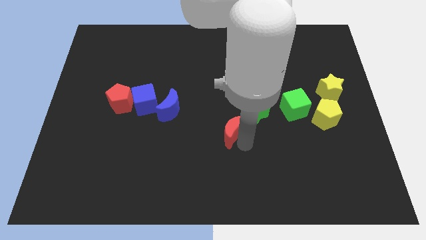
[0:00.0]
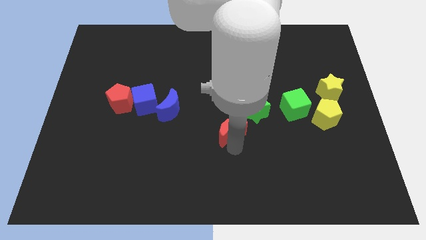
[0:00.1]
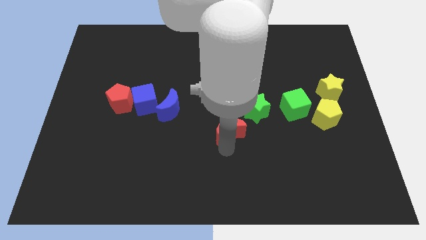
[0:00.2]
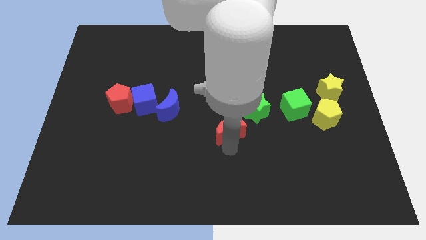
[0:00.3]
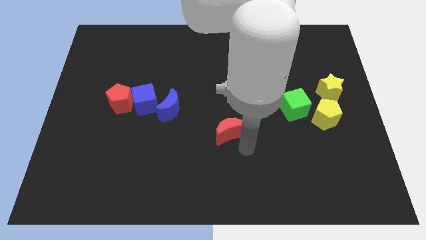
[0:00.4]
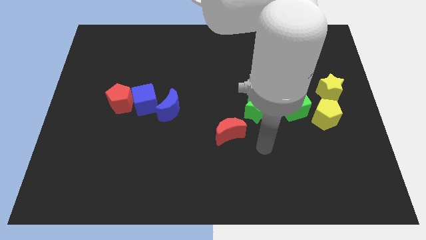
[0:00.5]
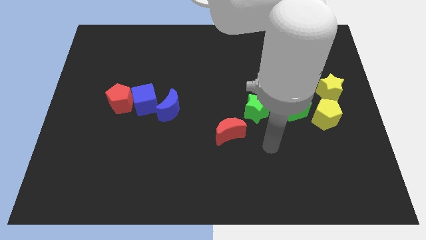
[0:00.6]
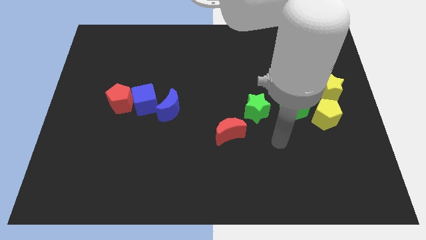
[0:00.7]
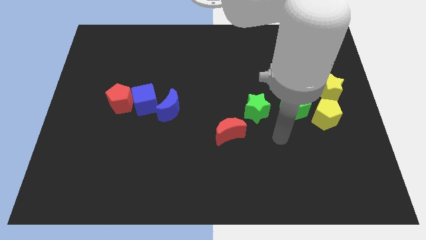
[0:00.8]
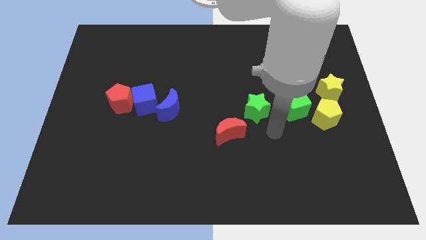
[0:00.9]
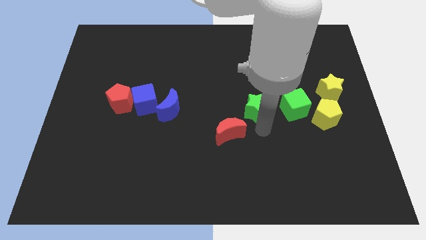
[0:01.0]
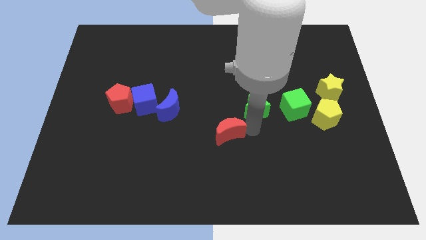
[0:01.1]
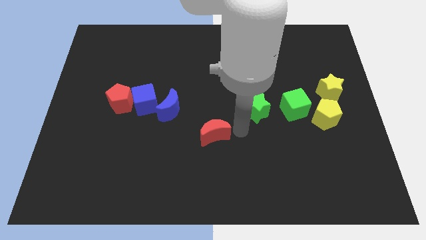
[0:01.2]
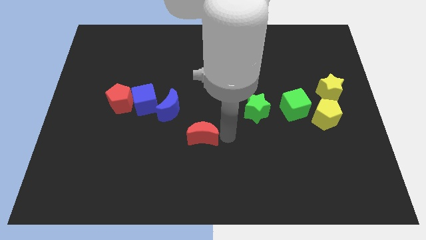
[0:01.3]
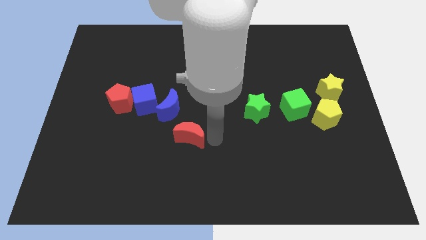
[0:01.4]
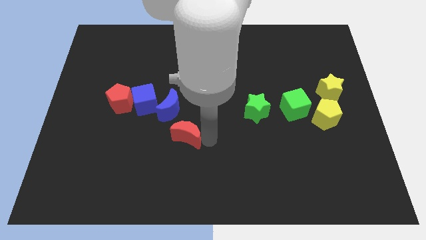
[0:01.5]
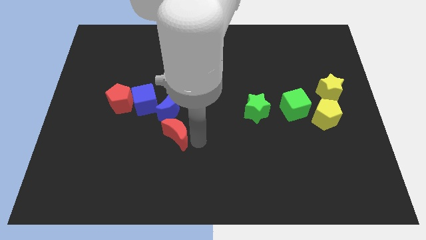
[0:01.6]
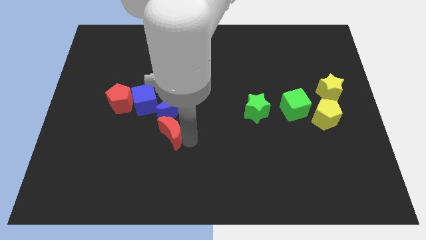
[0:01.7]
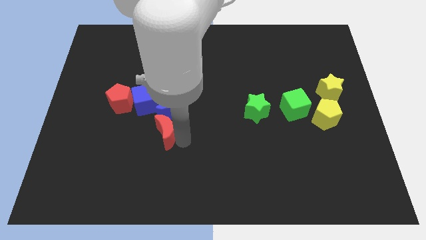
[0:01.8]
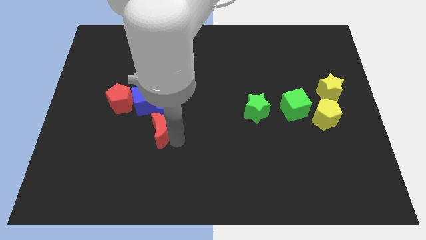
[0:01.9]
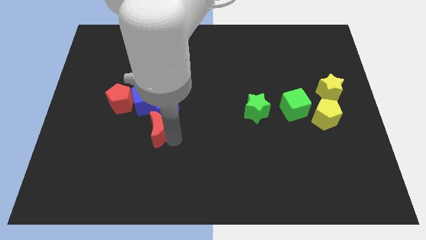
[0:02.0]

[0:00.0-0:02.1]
slide red moon below blue blocks

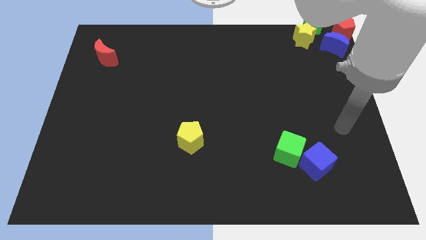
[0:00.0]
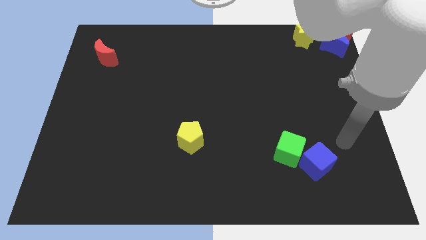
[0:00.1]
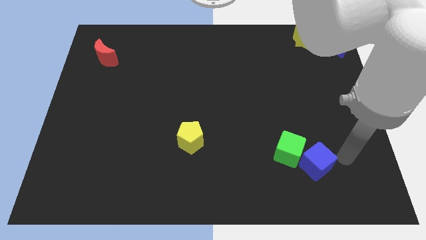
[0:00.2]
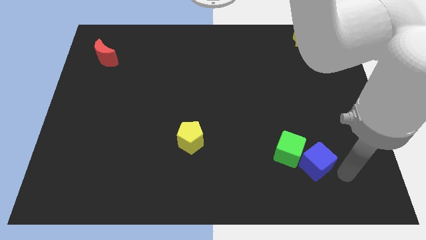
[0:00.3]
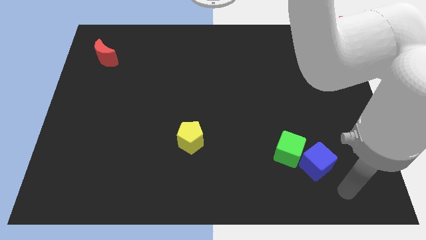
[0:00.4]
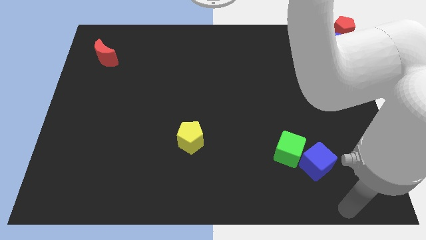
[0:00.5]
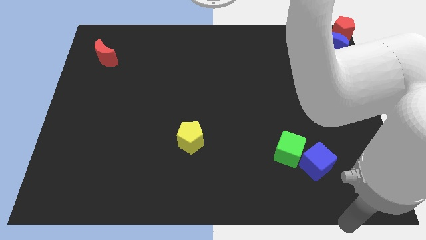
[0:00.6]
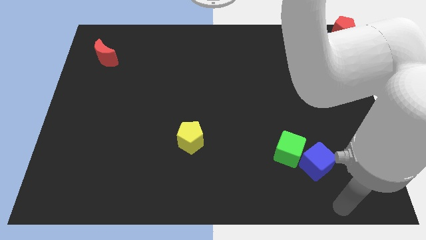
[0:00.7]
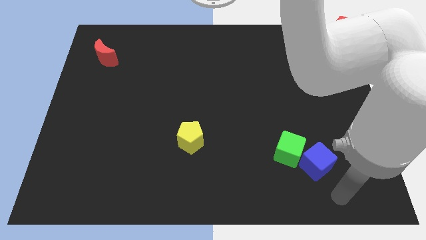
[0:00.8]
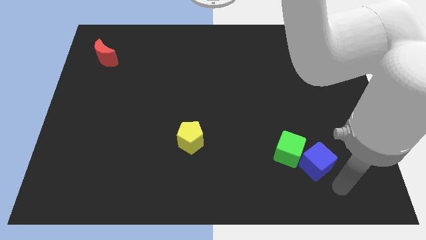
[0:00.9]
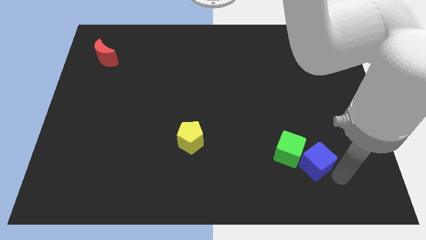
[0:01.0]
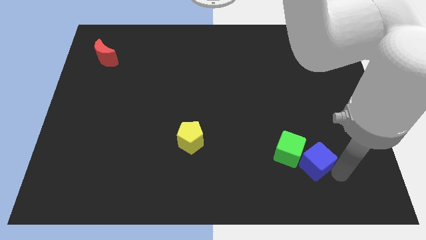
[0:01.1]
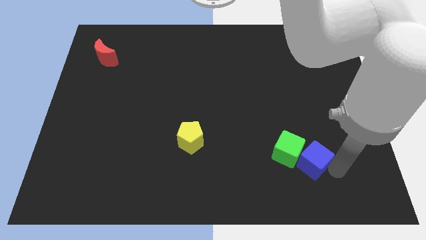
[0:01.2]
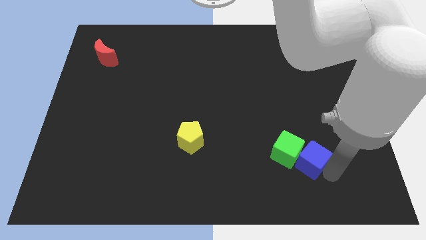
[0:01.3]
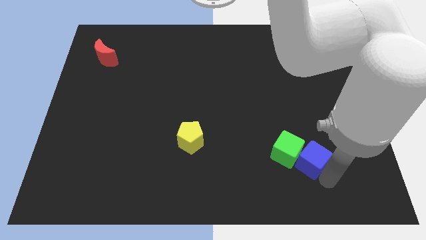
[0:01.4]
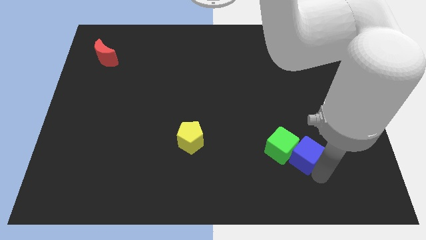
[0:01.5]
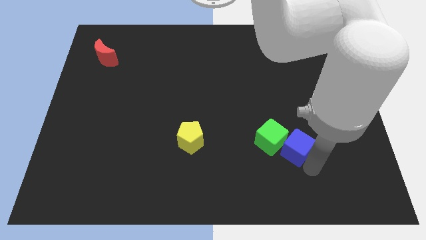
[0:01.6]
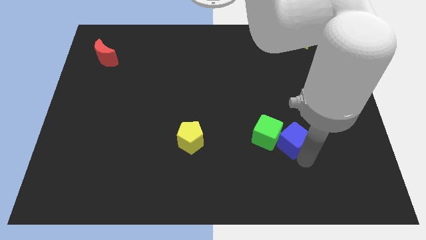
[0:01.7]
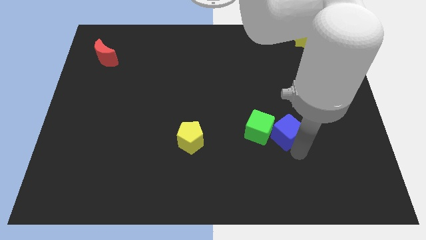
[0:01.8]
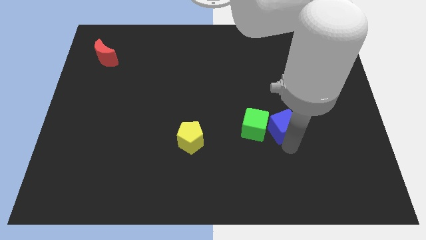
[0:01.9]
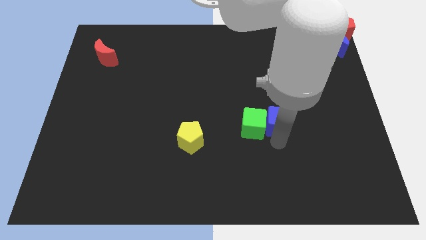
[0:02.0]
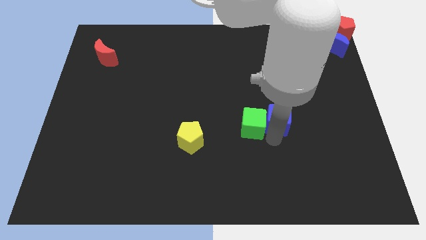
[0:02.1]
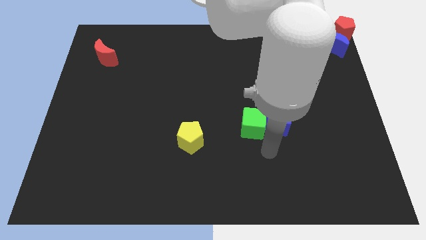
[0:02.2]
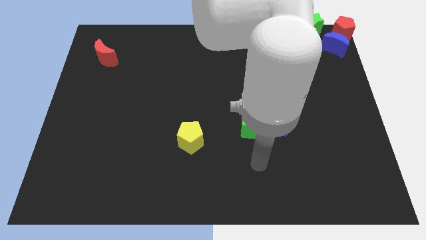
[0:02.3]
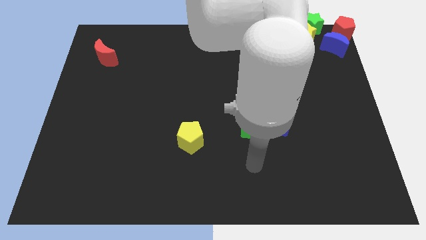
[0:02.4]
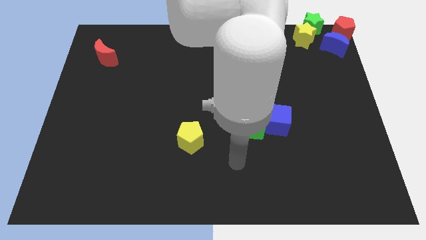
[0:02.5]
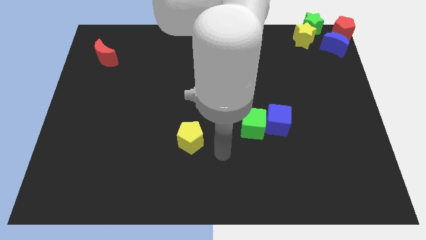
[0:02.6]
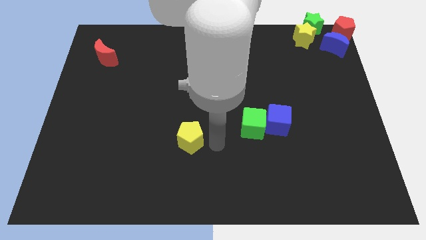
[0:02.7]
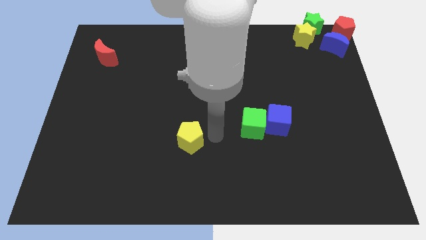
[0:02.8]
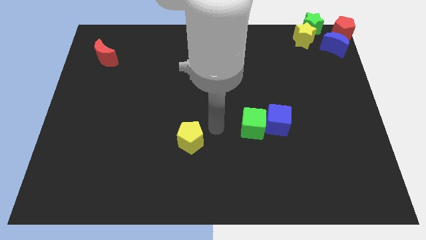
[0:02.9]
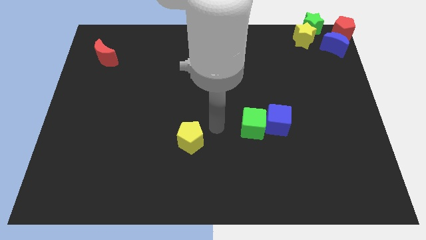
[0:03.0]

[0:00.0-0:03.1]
push the green cube towards the right side of the yellow pentagon with the help of the blue cube

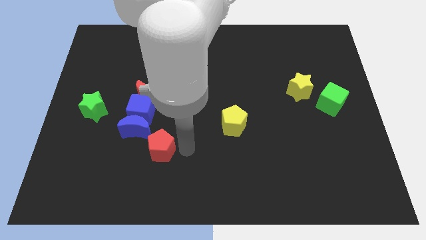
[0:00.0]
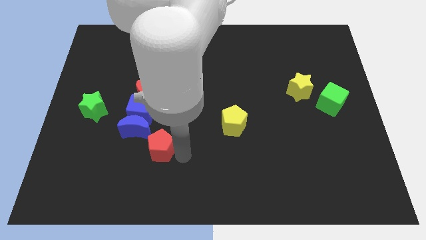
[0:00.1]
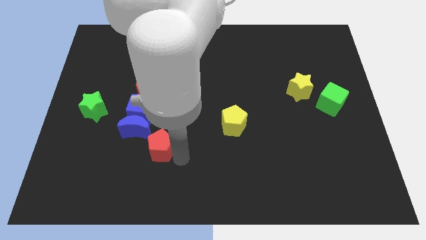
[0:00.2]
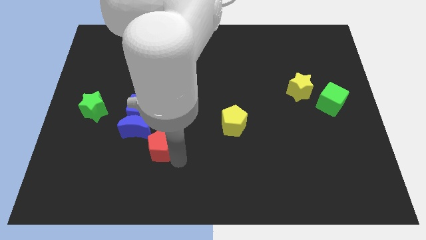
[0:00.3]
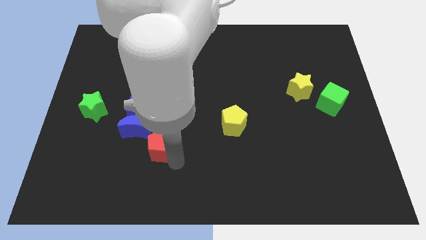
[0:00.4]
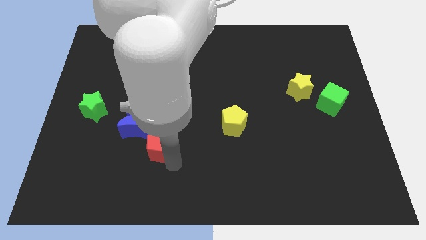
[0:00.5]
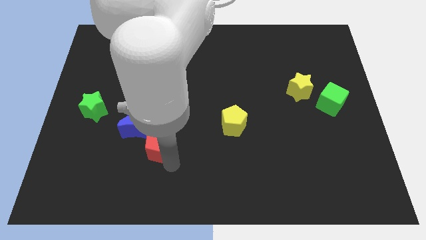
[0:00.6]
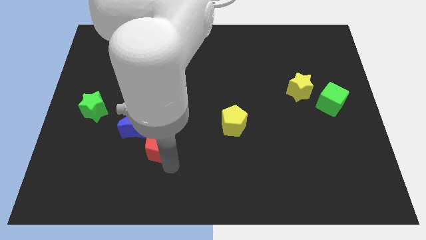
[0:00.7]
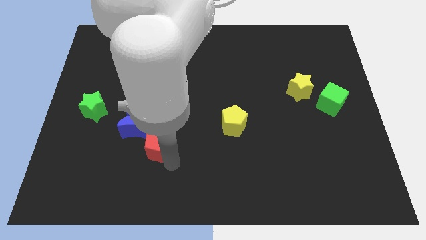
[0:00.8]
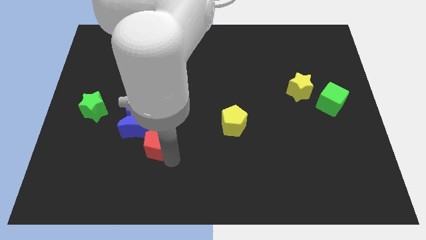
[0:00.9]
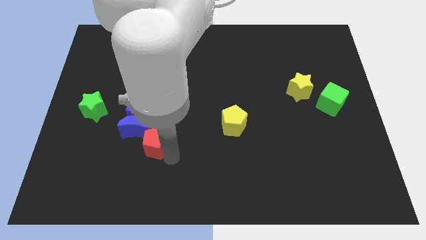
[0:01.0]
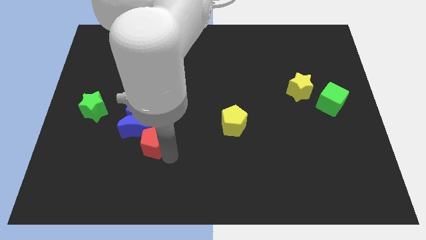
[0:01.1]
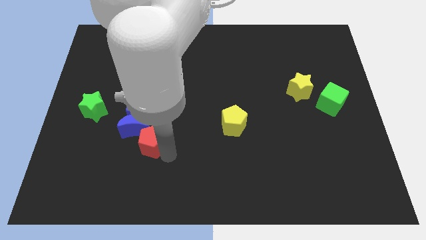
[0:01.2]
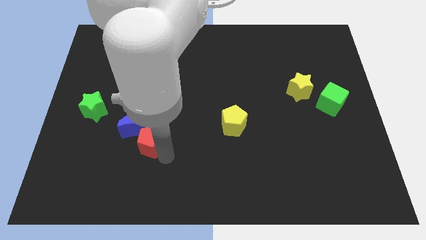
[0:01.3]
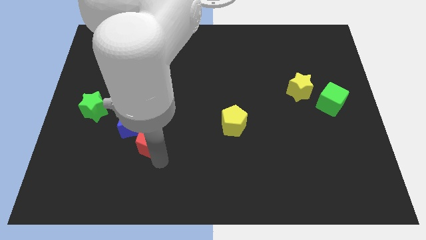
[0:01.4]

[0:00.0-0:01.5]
push the red pentagon blue crescent

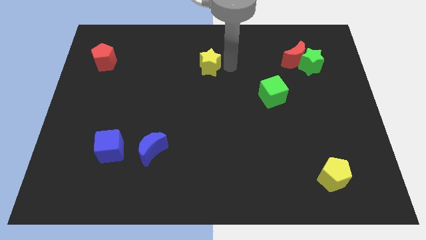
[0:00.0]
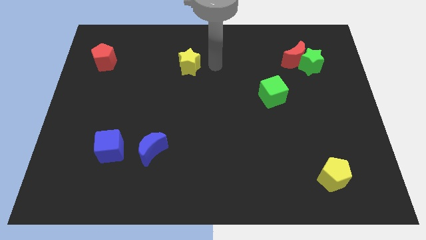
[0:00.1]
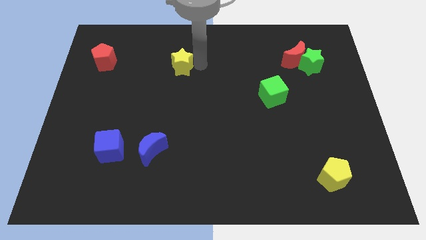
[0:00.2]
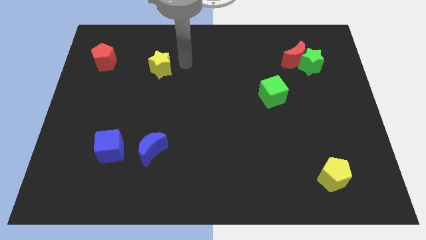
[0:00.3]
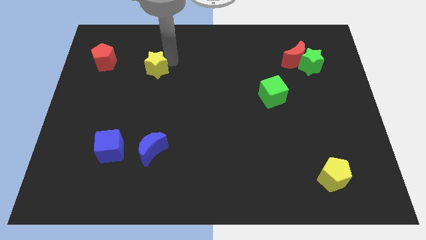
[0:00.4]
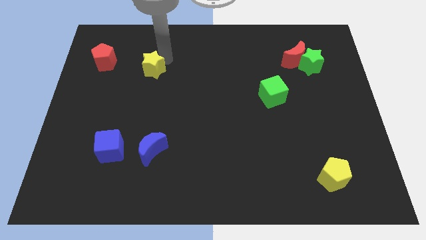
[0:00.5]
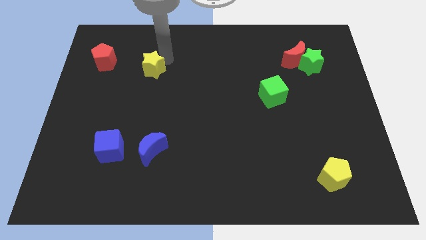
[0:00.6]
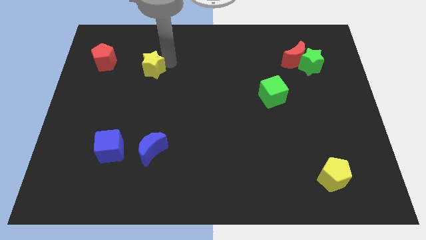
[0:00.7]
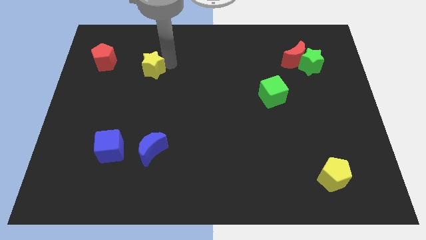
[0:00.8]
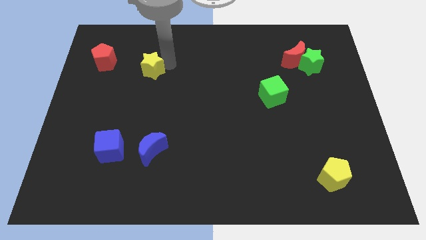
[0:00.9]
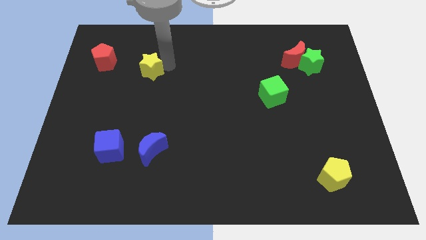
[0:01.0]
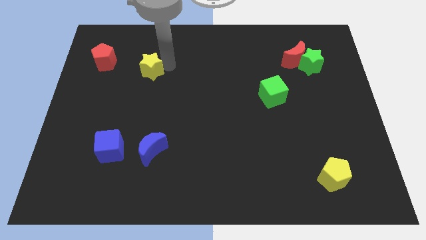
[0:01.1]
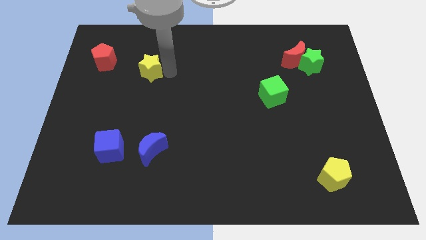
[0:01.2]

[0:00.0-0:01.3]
move the yellow star closer to the red pentagon

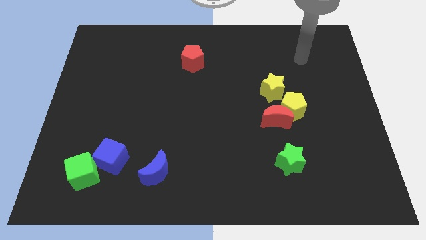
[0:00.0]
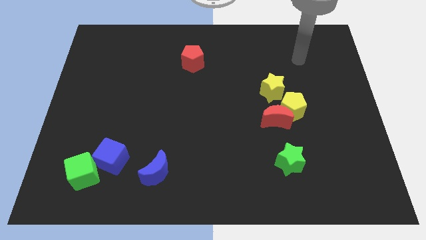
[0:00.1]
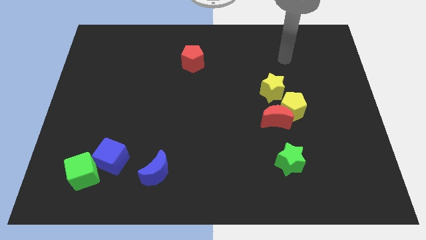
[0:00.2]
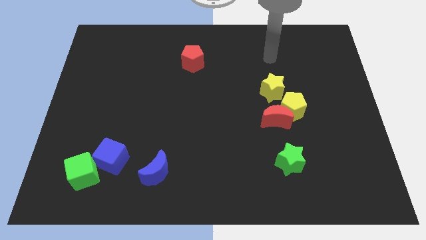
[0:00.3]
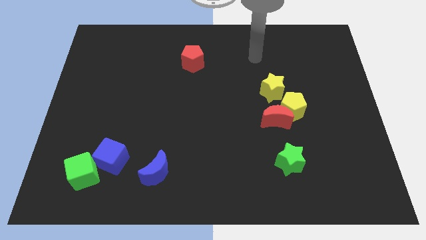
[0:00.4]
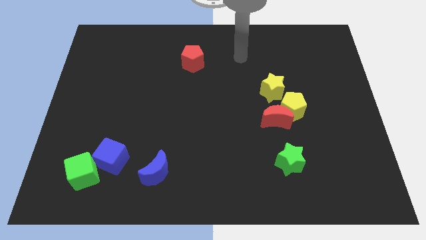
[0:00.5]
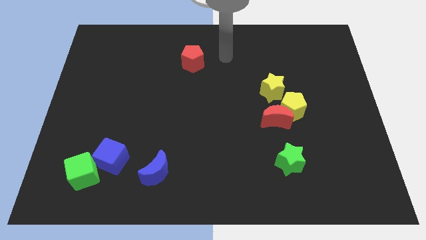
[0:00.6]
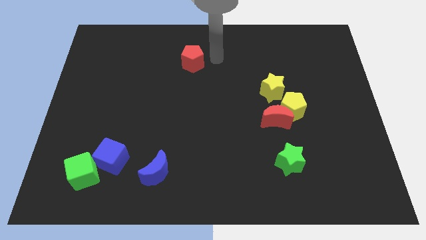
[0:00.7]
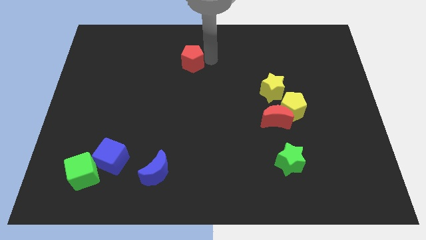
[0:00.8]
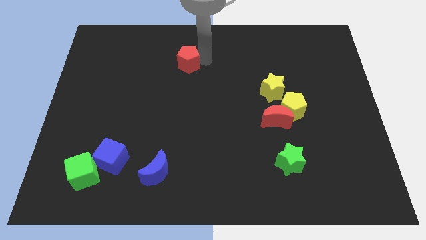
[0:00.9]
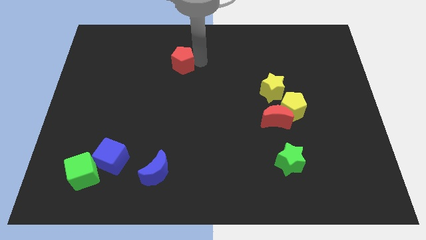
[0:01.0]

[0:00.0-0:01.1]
tap on the right side of red pentagon
